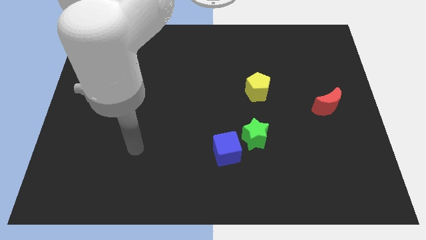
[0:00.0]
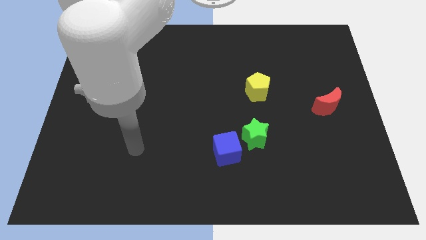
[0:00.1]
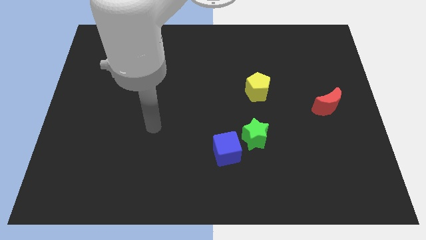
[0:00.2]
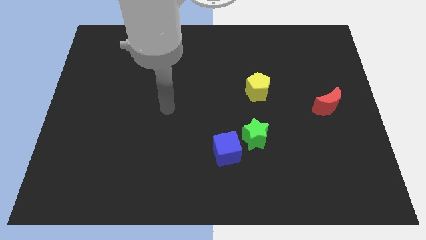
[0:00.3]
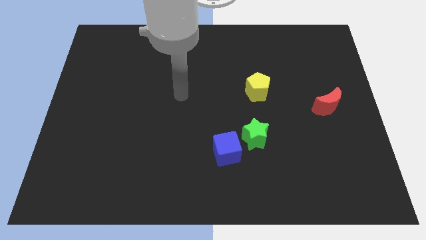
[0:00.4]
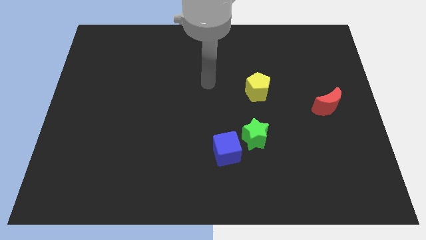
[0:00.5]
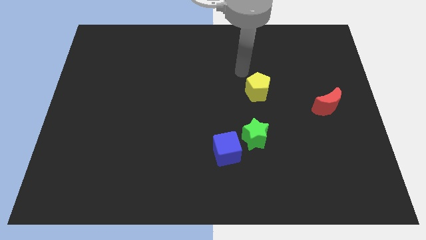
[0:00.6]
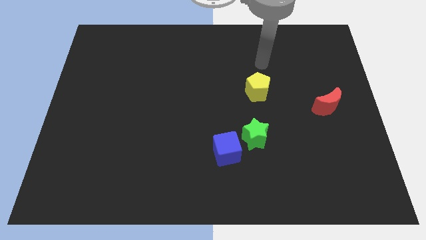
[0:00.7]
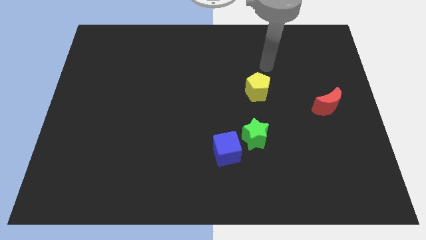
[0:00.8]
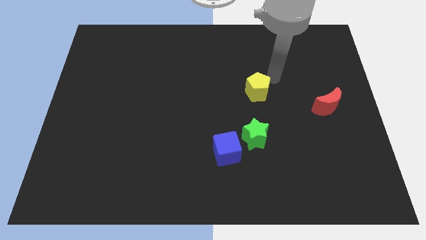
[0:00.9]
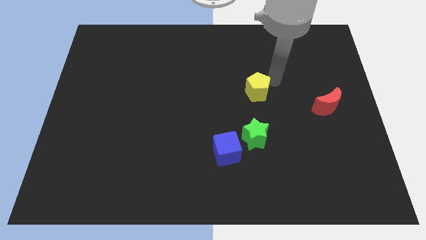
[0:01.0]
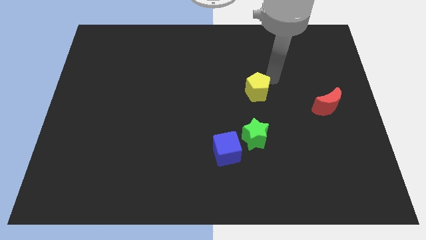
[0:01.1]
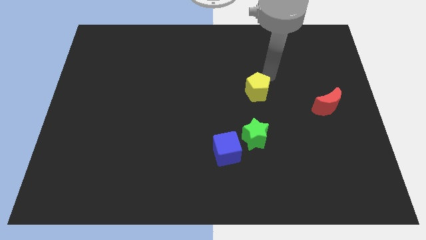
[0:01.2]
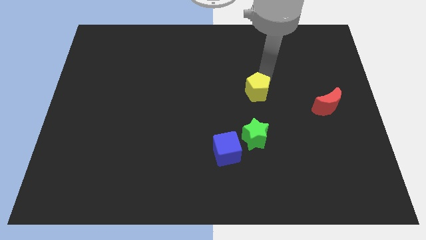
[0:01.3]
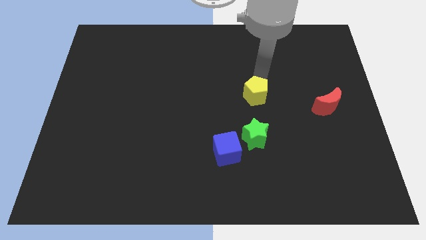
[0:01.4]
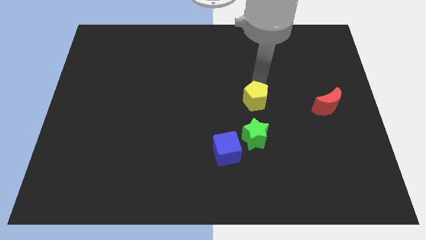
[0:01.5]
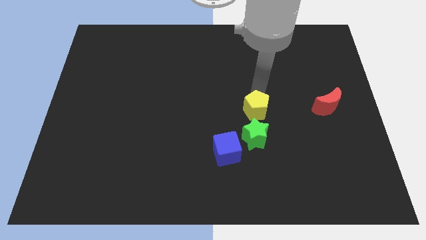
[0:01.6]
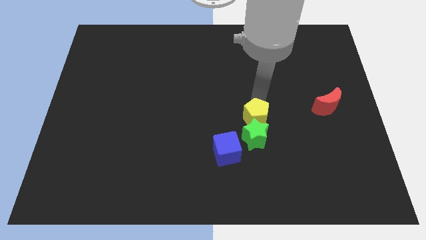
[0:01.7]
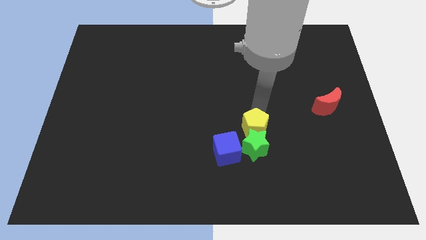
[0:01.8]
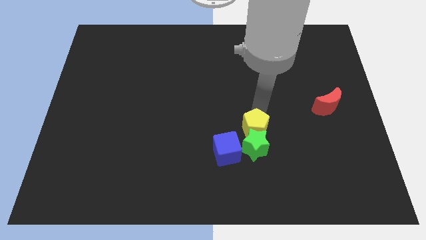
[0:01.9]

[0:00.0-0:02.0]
put the yellow block next to the green block

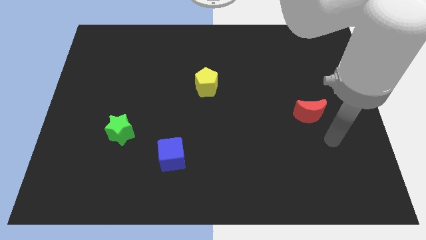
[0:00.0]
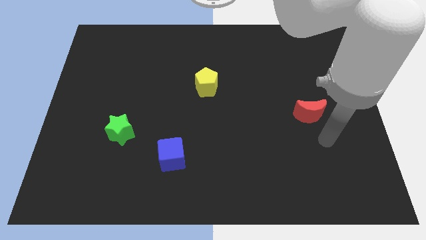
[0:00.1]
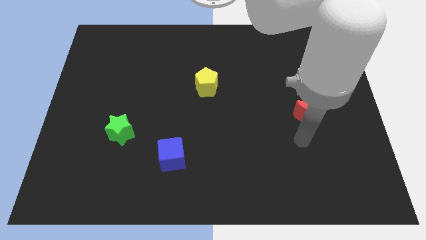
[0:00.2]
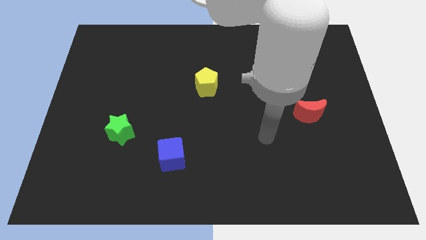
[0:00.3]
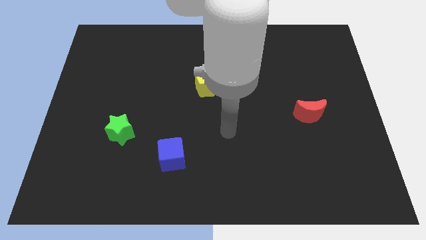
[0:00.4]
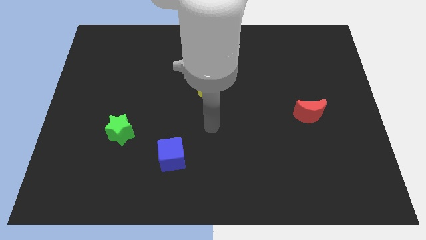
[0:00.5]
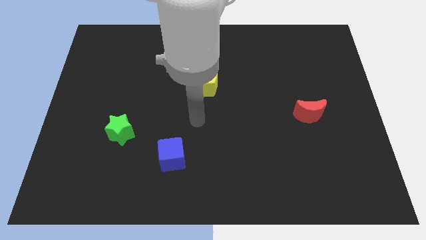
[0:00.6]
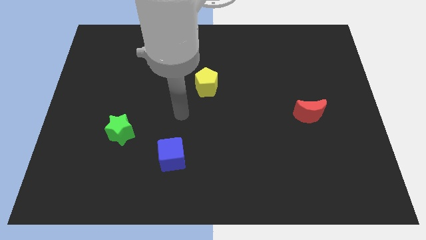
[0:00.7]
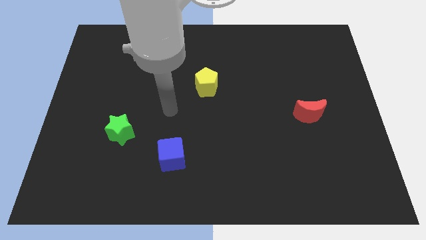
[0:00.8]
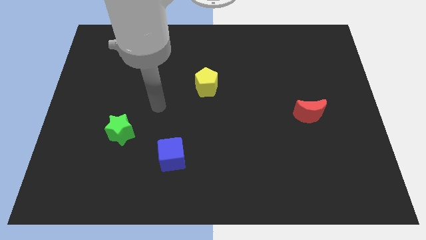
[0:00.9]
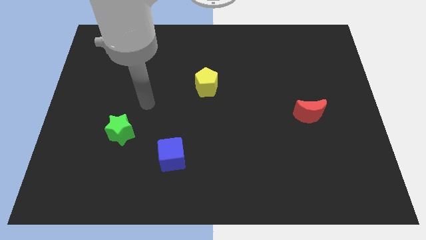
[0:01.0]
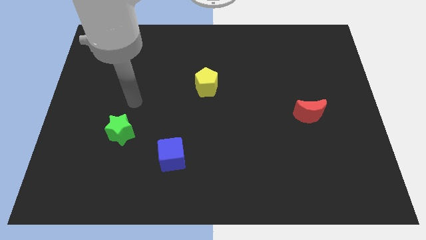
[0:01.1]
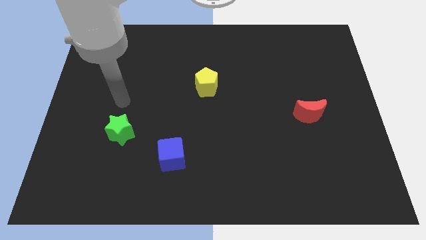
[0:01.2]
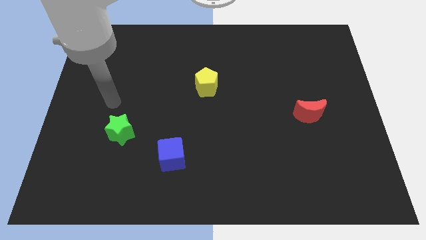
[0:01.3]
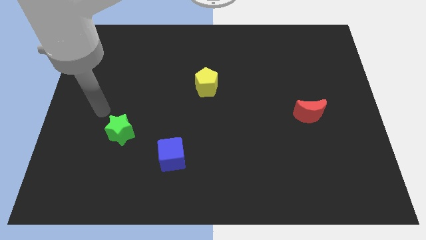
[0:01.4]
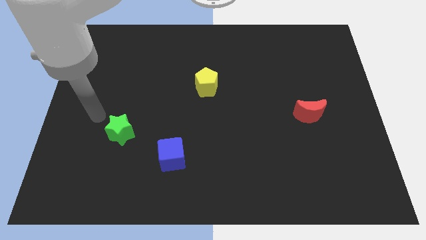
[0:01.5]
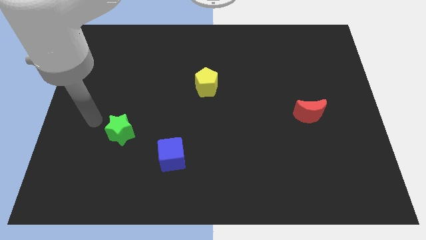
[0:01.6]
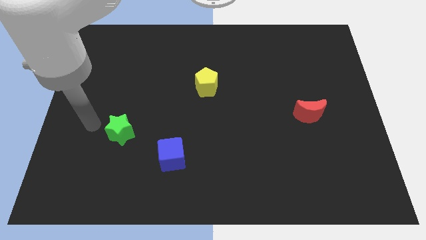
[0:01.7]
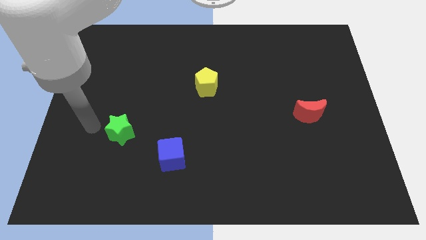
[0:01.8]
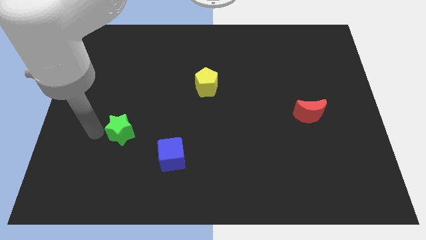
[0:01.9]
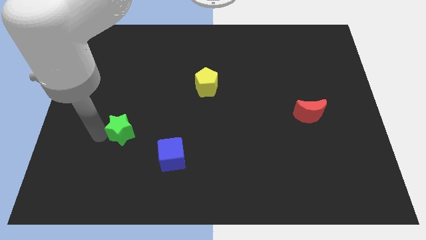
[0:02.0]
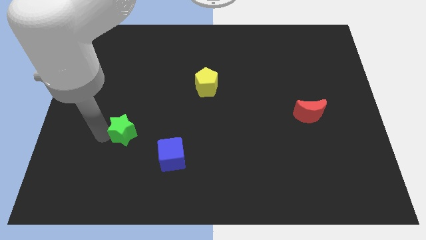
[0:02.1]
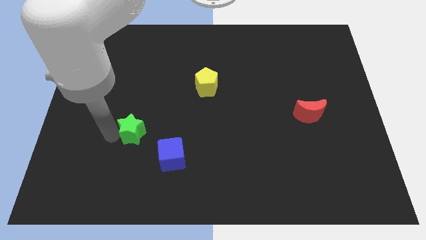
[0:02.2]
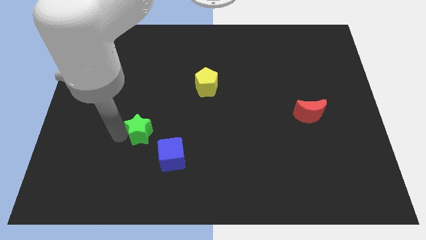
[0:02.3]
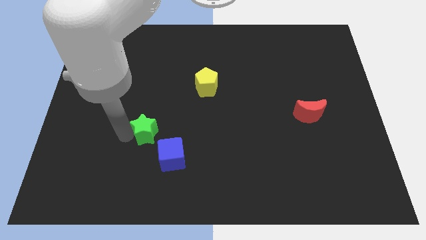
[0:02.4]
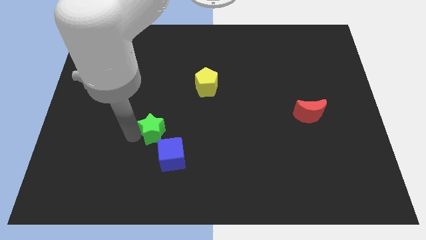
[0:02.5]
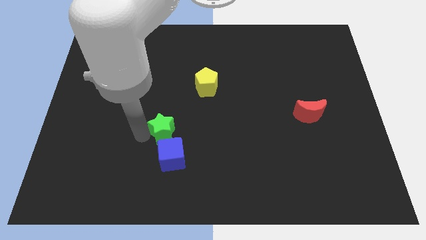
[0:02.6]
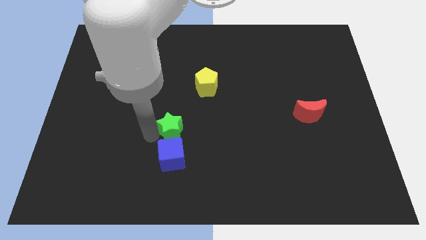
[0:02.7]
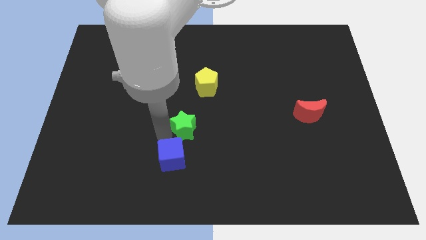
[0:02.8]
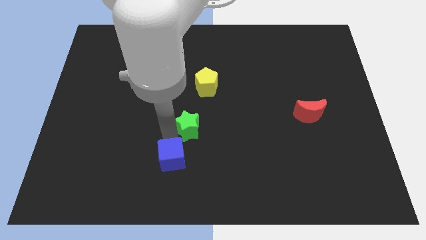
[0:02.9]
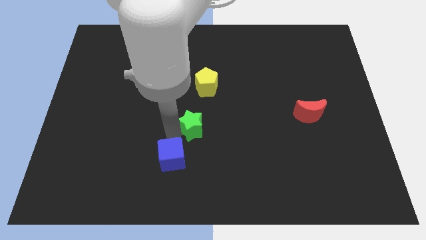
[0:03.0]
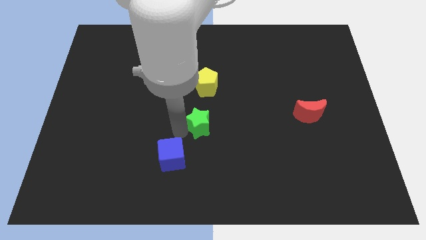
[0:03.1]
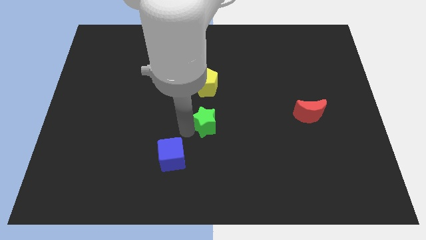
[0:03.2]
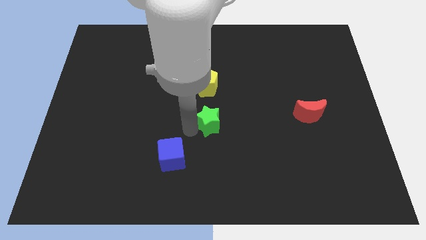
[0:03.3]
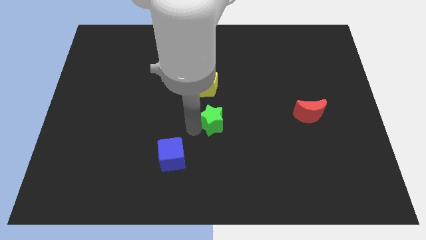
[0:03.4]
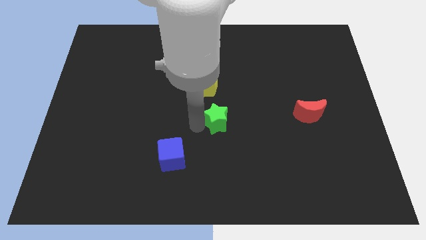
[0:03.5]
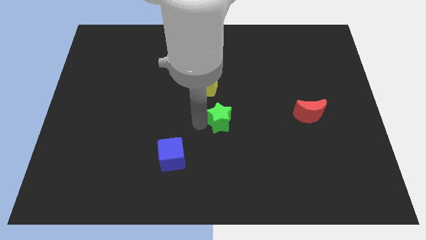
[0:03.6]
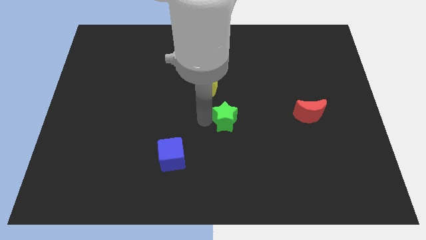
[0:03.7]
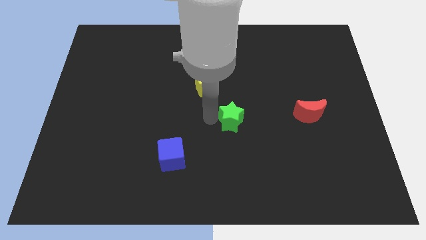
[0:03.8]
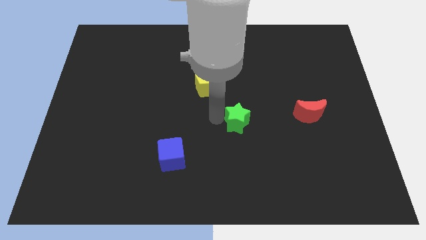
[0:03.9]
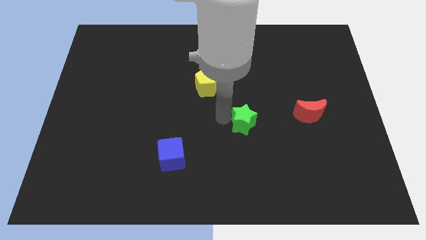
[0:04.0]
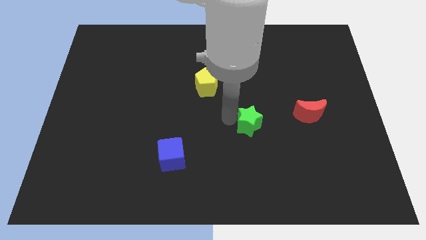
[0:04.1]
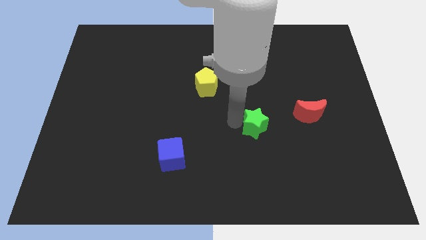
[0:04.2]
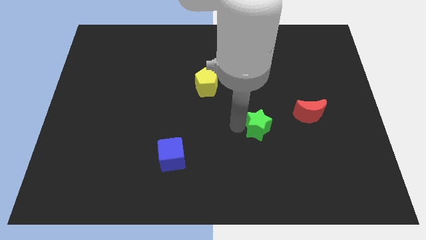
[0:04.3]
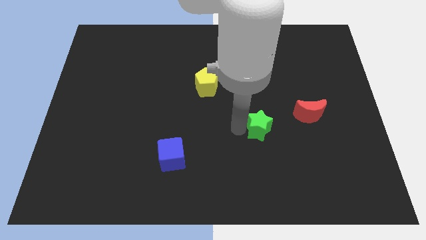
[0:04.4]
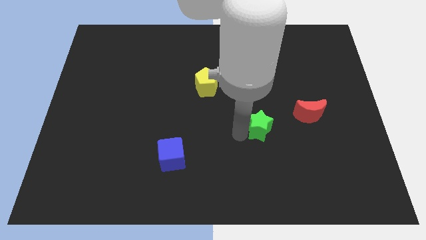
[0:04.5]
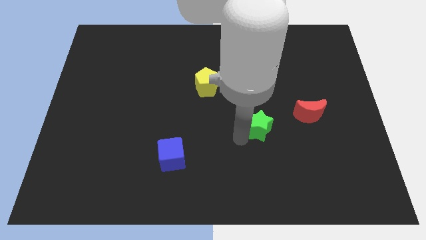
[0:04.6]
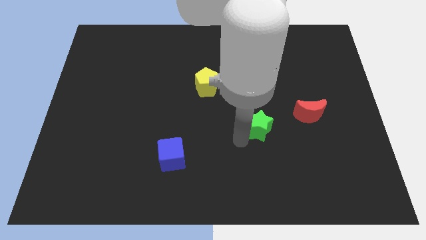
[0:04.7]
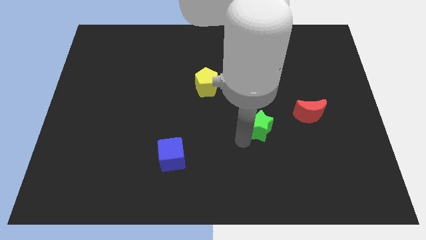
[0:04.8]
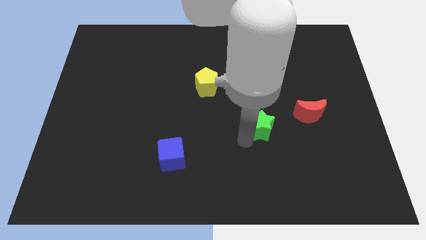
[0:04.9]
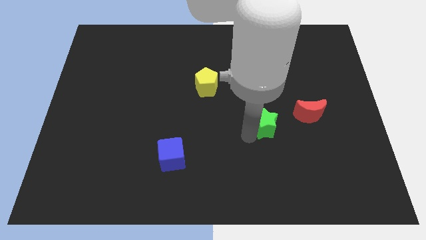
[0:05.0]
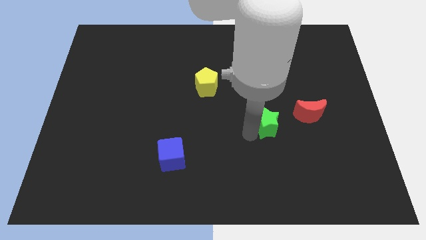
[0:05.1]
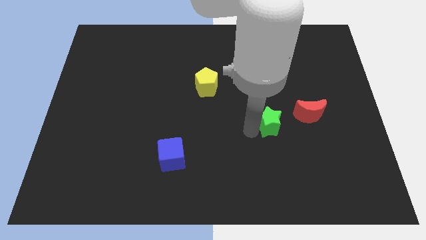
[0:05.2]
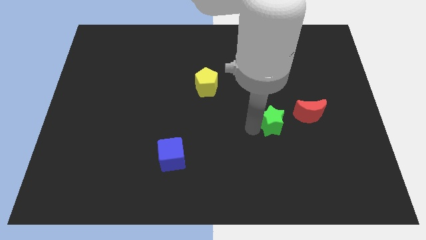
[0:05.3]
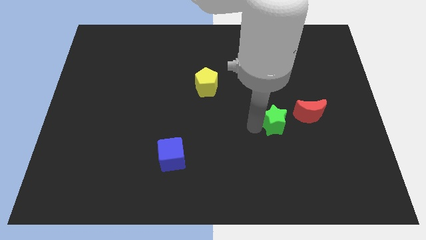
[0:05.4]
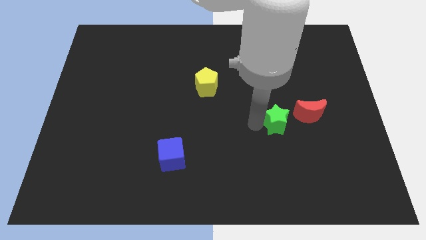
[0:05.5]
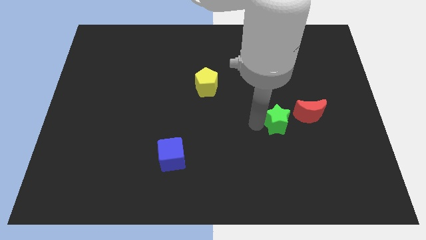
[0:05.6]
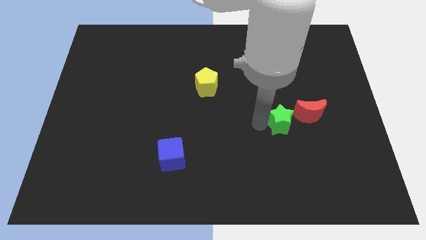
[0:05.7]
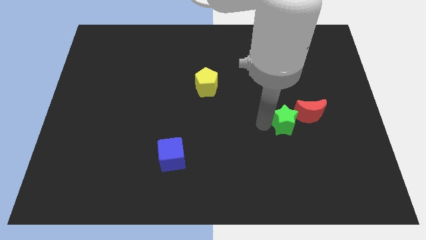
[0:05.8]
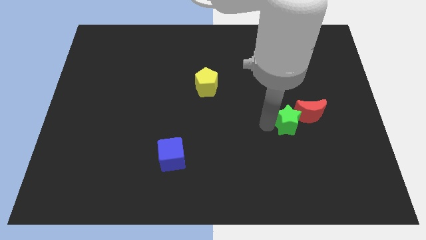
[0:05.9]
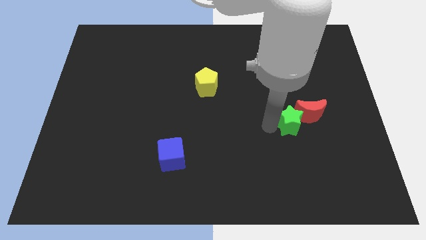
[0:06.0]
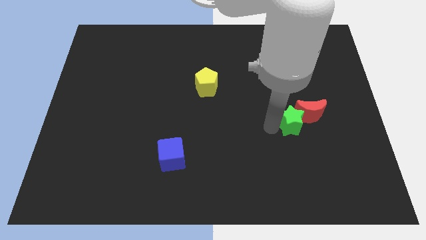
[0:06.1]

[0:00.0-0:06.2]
put the star to the red block

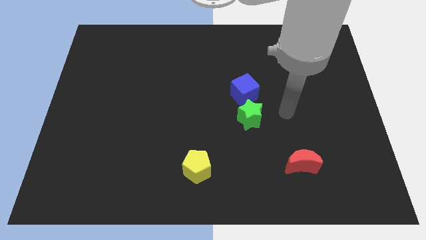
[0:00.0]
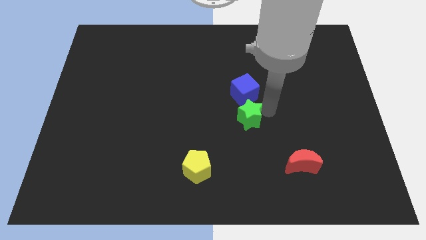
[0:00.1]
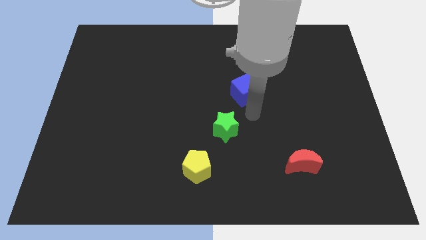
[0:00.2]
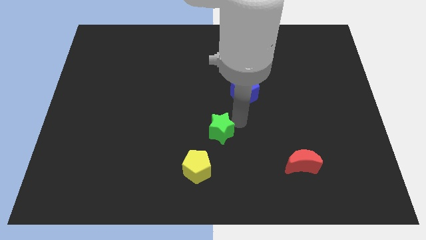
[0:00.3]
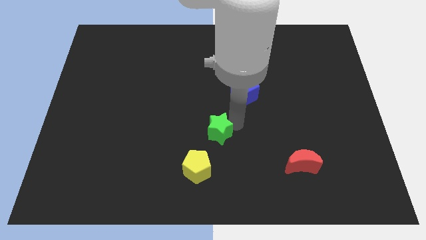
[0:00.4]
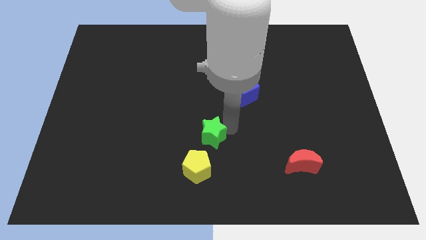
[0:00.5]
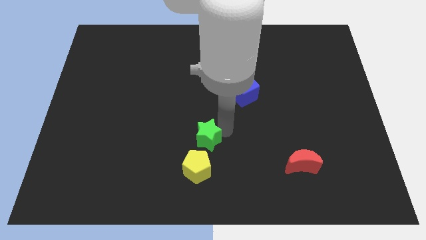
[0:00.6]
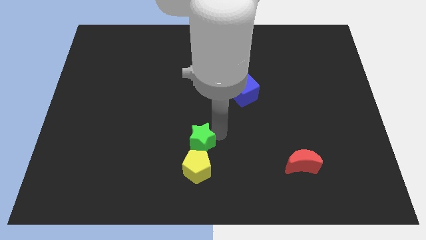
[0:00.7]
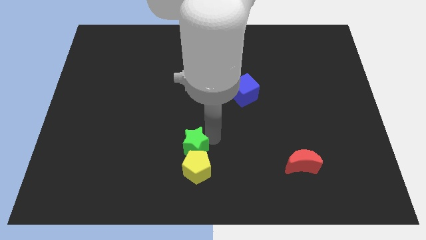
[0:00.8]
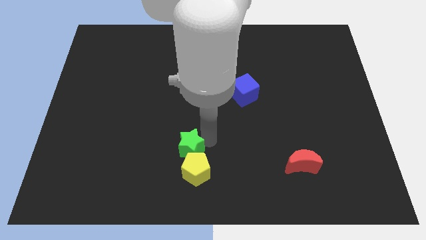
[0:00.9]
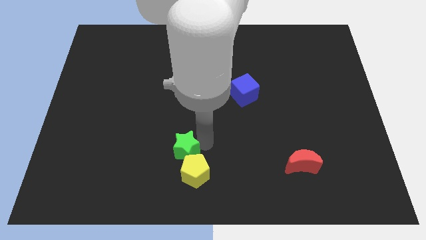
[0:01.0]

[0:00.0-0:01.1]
move the green block to the pentagon
